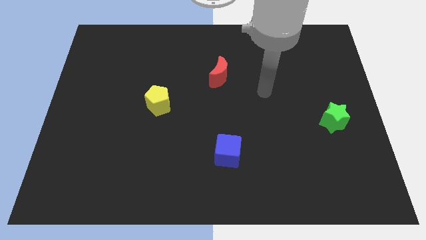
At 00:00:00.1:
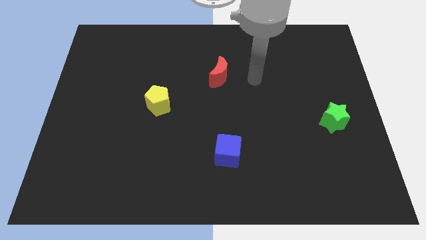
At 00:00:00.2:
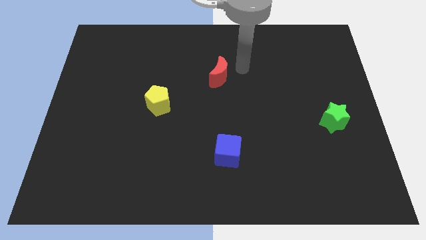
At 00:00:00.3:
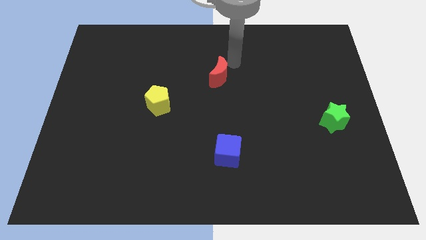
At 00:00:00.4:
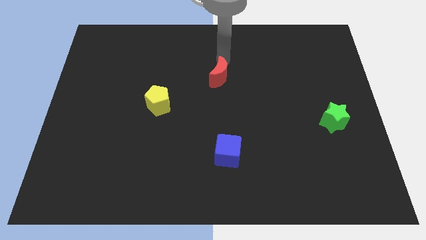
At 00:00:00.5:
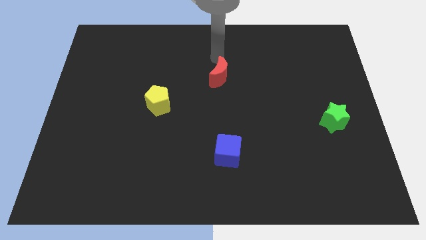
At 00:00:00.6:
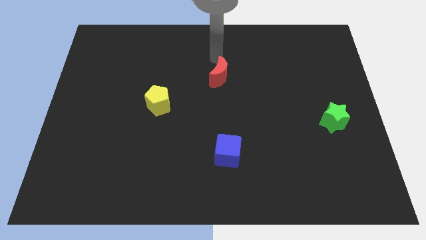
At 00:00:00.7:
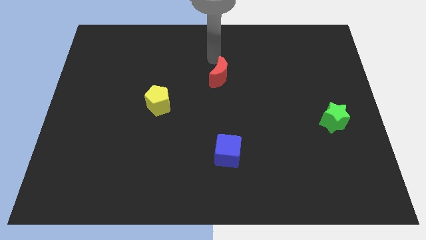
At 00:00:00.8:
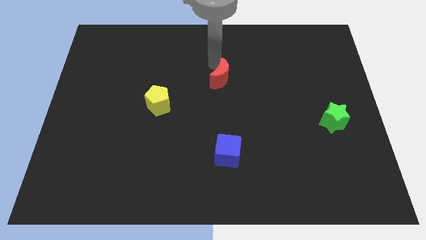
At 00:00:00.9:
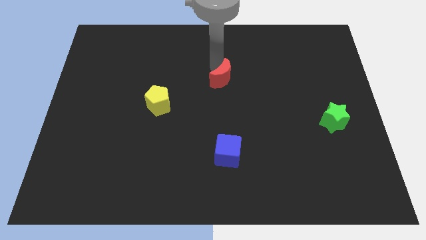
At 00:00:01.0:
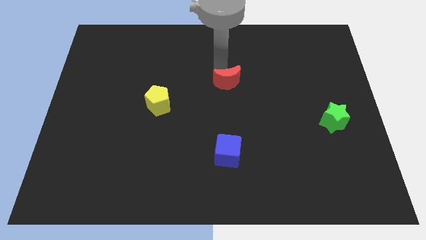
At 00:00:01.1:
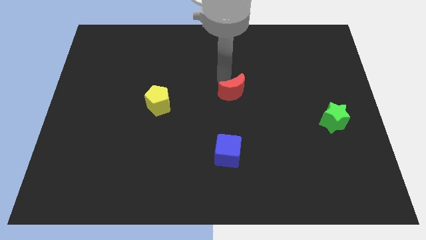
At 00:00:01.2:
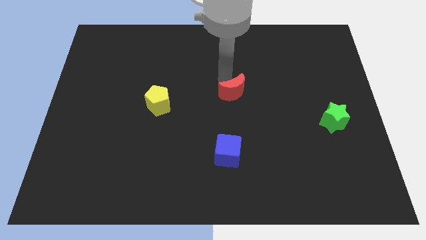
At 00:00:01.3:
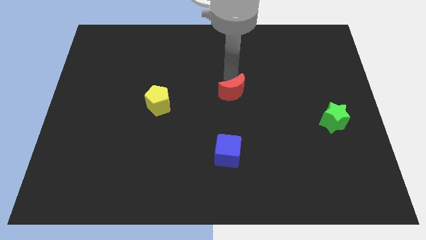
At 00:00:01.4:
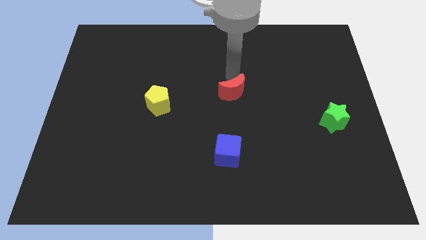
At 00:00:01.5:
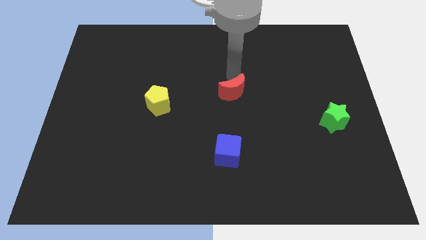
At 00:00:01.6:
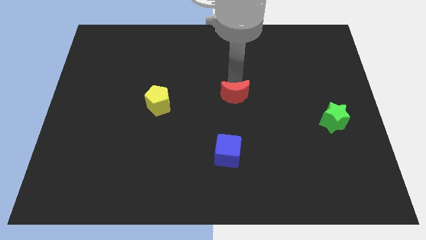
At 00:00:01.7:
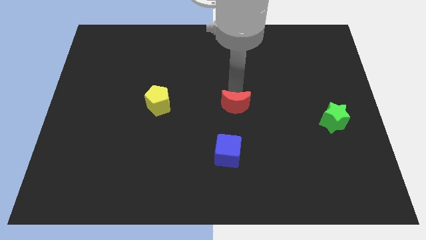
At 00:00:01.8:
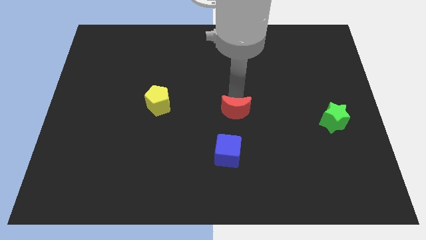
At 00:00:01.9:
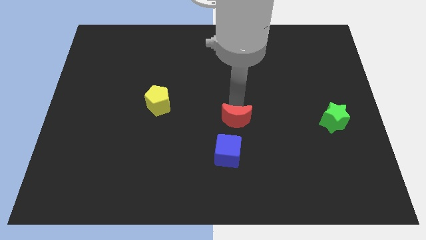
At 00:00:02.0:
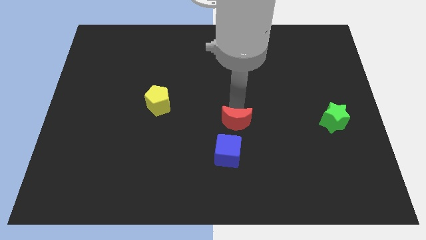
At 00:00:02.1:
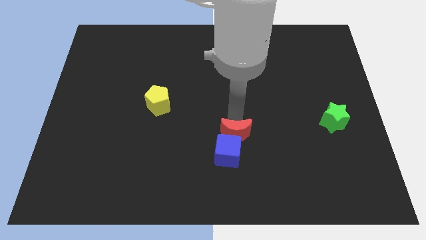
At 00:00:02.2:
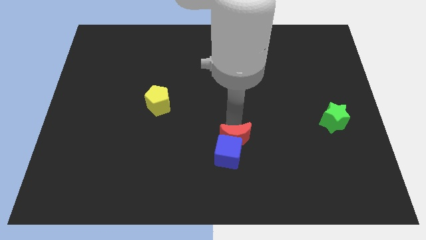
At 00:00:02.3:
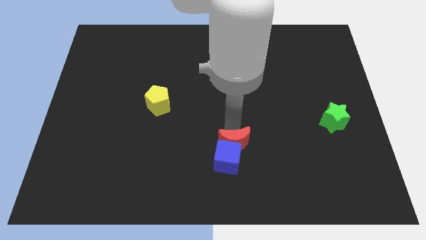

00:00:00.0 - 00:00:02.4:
push the red moon next to the blue cube

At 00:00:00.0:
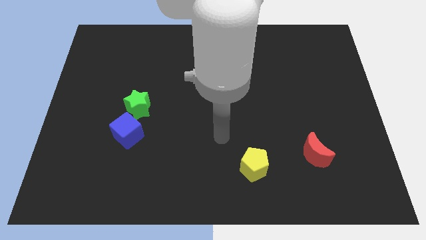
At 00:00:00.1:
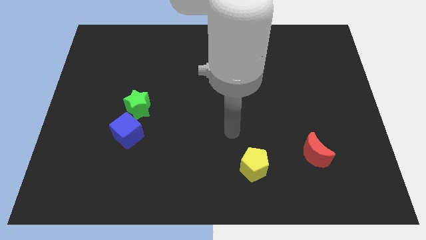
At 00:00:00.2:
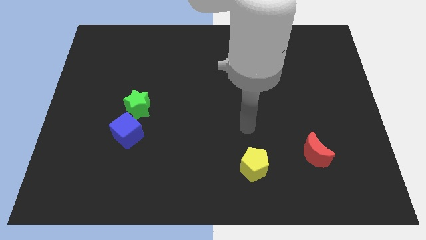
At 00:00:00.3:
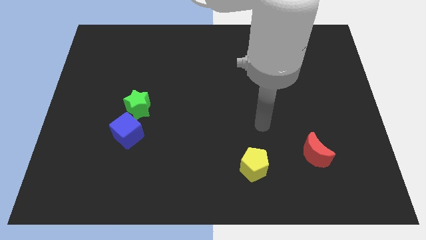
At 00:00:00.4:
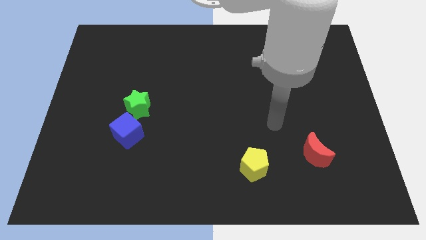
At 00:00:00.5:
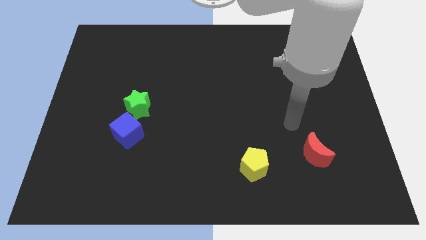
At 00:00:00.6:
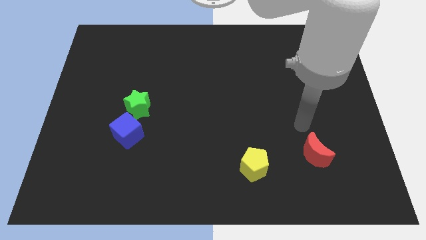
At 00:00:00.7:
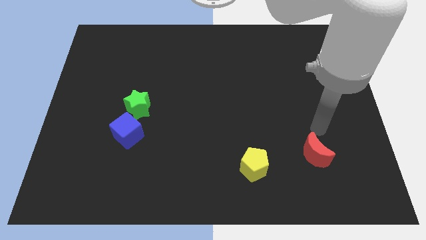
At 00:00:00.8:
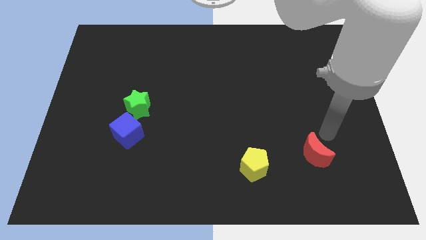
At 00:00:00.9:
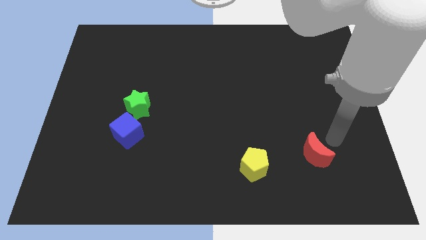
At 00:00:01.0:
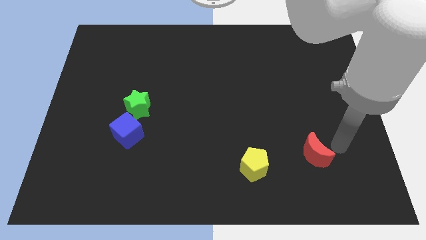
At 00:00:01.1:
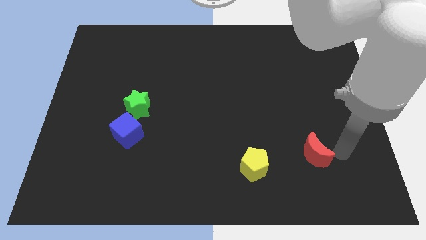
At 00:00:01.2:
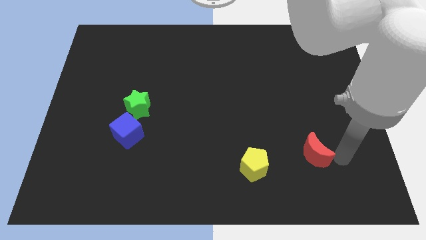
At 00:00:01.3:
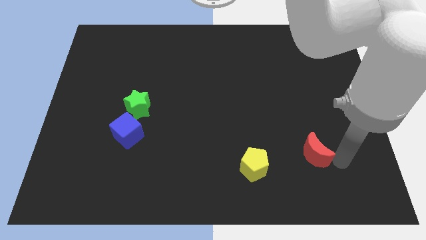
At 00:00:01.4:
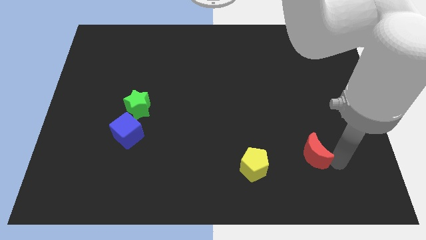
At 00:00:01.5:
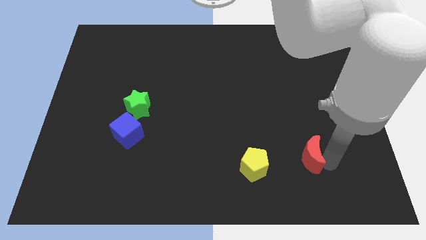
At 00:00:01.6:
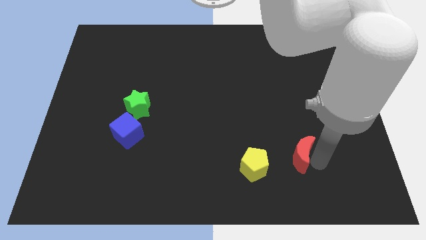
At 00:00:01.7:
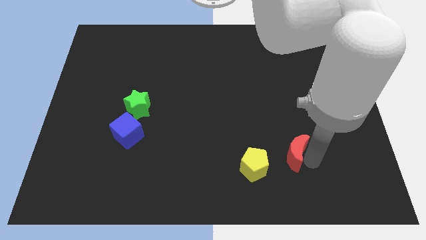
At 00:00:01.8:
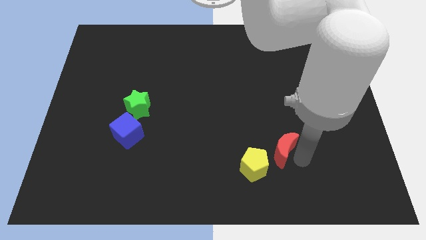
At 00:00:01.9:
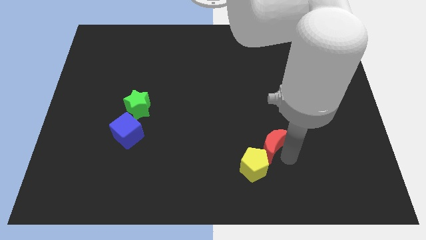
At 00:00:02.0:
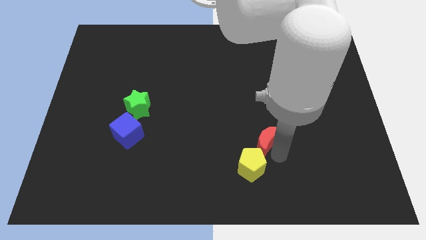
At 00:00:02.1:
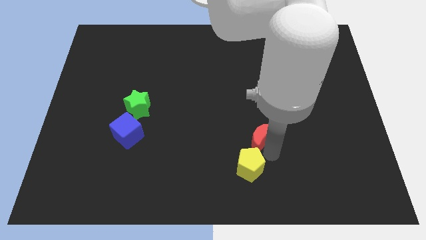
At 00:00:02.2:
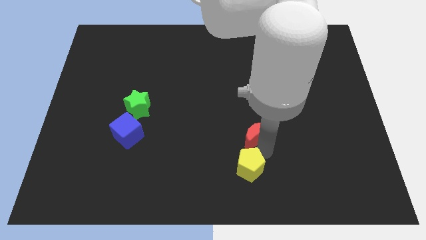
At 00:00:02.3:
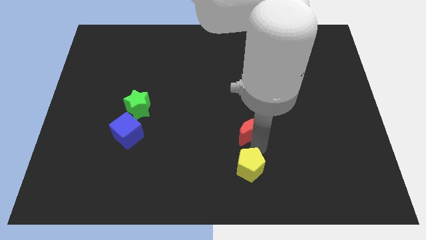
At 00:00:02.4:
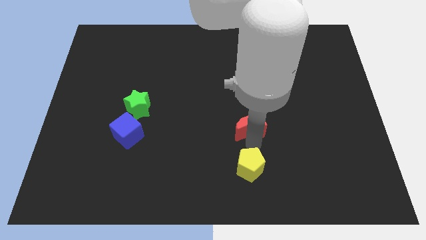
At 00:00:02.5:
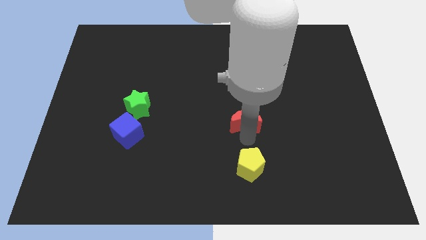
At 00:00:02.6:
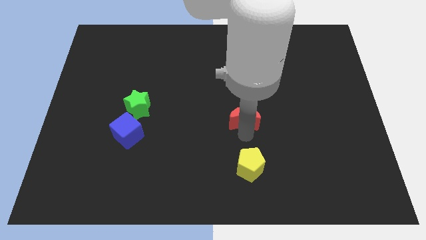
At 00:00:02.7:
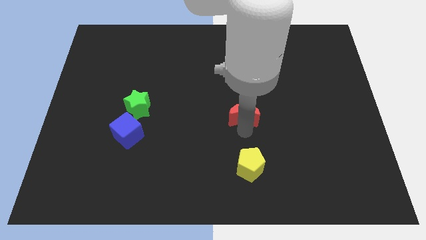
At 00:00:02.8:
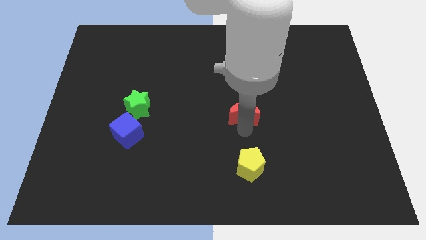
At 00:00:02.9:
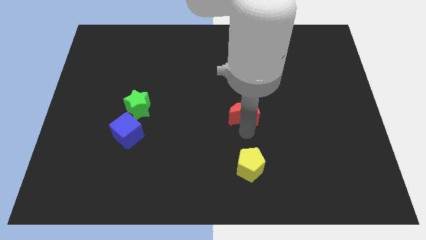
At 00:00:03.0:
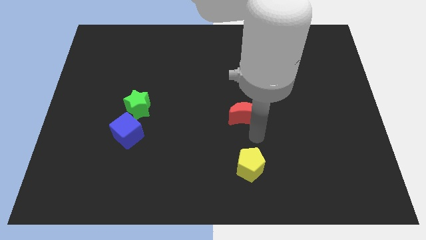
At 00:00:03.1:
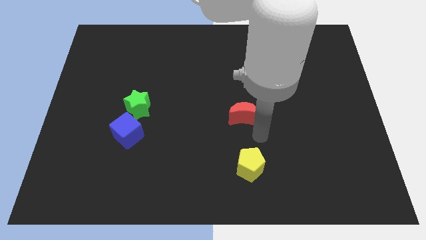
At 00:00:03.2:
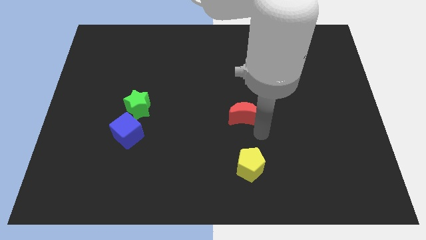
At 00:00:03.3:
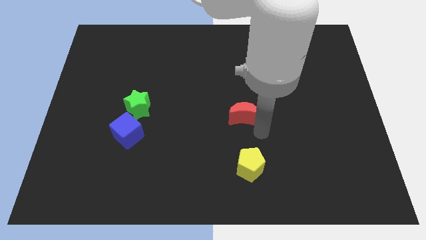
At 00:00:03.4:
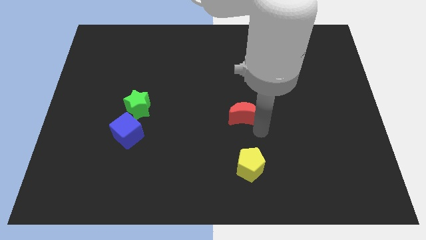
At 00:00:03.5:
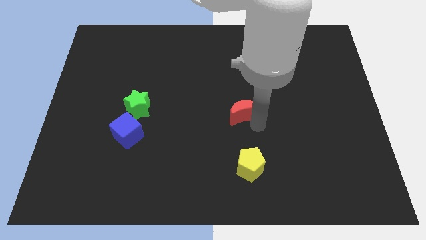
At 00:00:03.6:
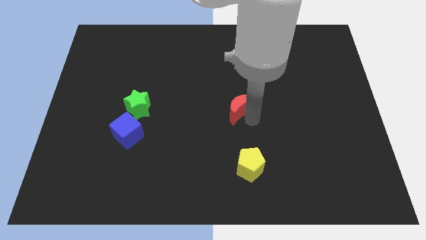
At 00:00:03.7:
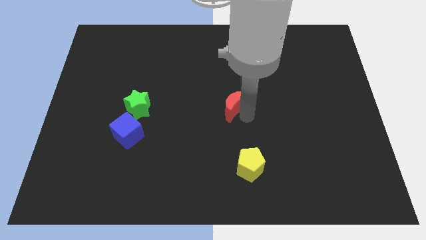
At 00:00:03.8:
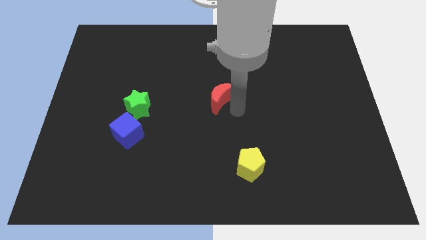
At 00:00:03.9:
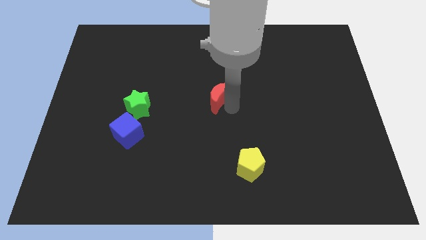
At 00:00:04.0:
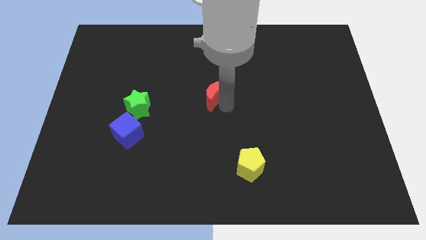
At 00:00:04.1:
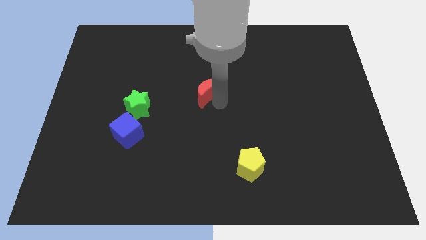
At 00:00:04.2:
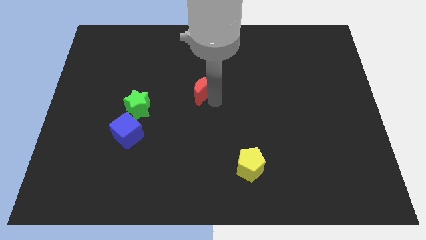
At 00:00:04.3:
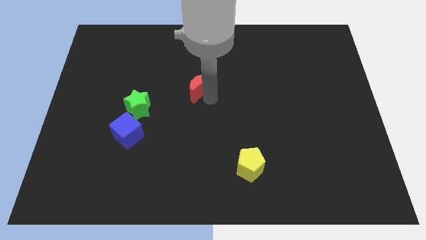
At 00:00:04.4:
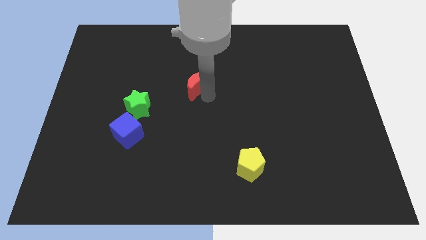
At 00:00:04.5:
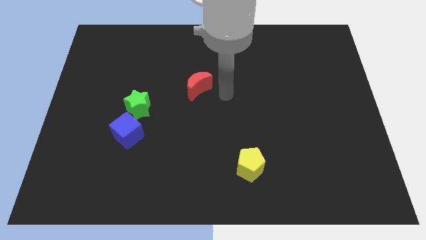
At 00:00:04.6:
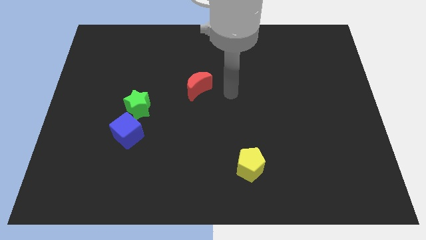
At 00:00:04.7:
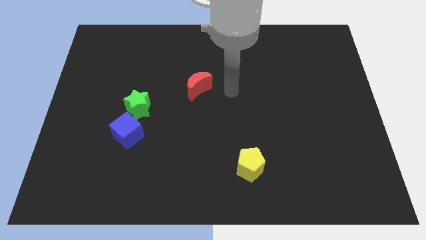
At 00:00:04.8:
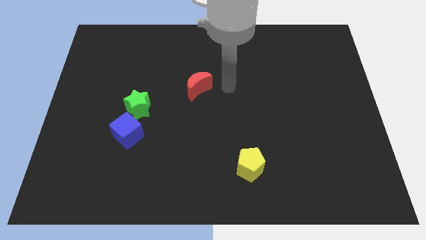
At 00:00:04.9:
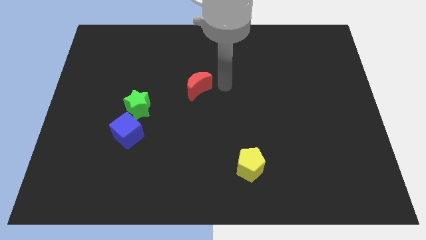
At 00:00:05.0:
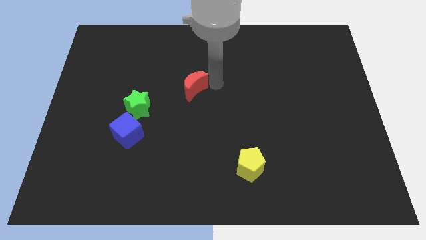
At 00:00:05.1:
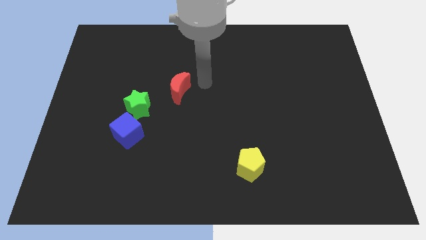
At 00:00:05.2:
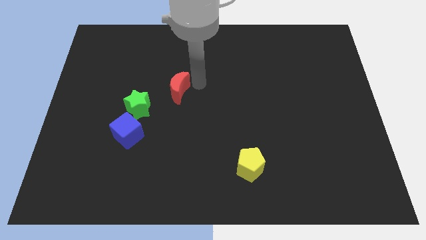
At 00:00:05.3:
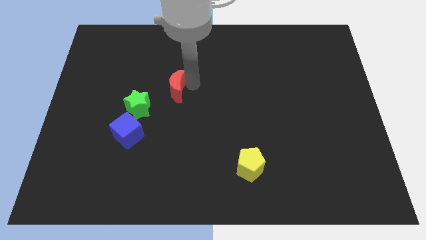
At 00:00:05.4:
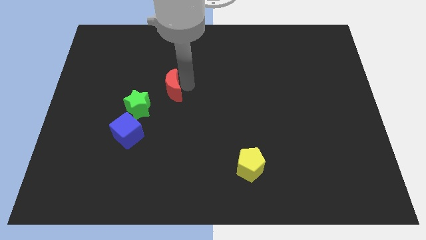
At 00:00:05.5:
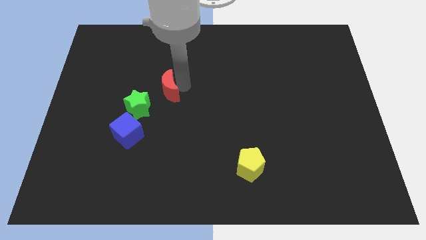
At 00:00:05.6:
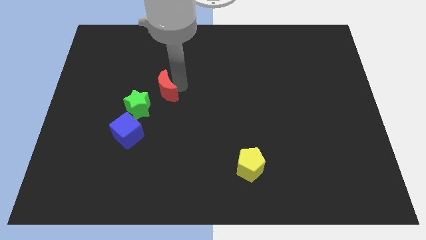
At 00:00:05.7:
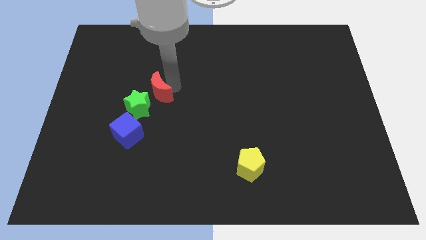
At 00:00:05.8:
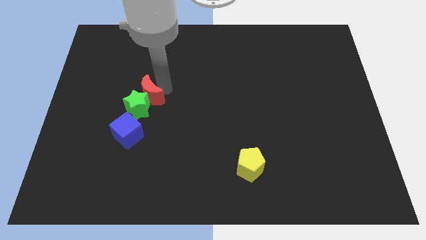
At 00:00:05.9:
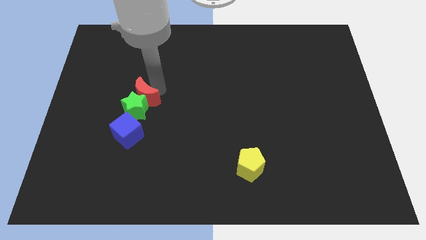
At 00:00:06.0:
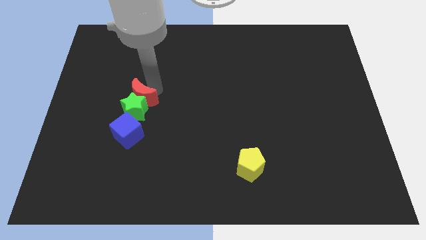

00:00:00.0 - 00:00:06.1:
move the moon towards the star
